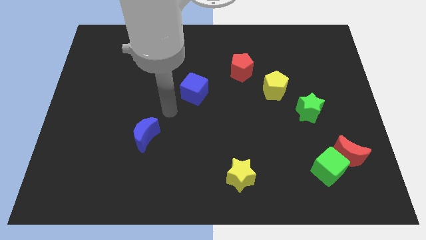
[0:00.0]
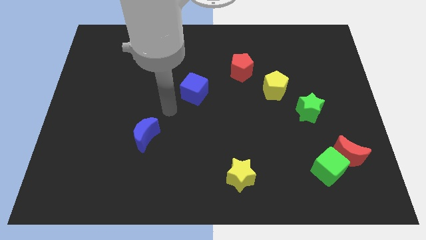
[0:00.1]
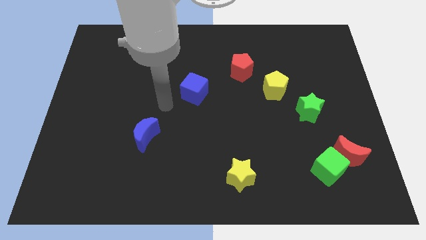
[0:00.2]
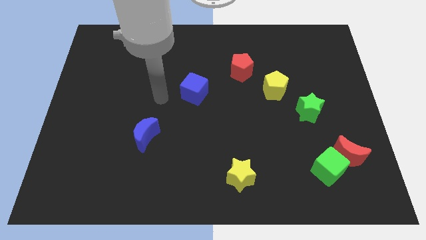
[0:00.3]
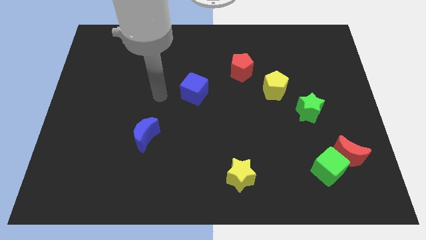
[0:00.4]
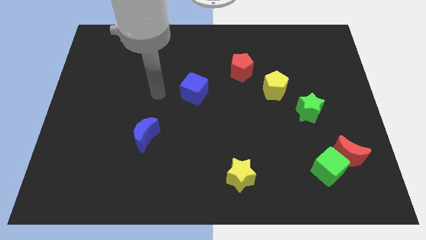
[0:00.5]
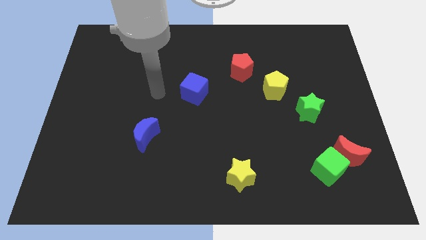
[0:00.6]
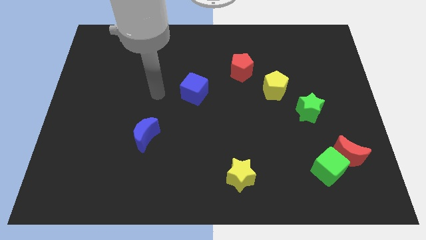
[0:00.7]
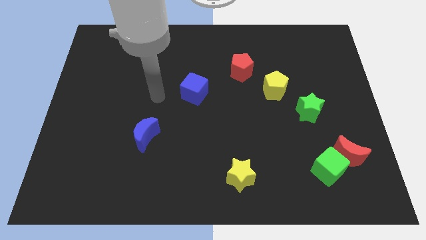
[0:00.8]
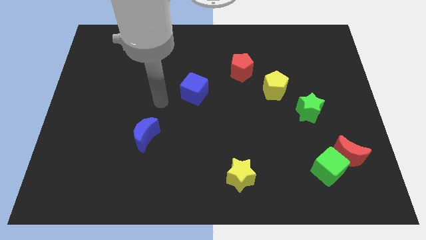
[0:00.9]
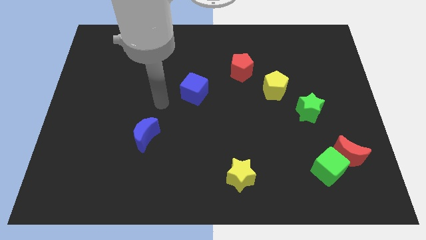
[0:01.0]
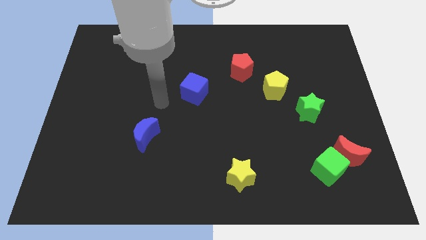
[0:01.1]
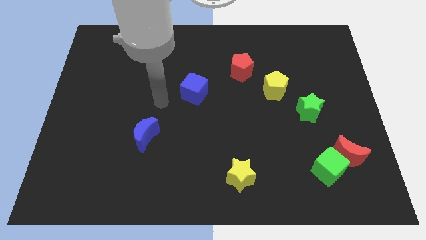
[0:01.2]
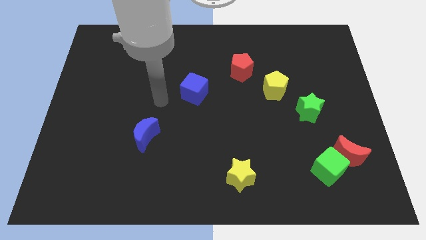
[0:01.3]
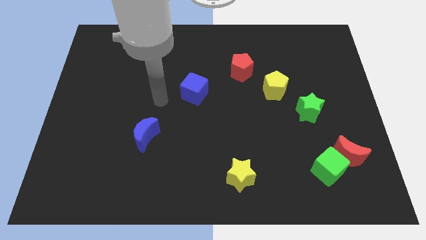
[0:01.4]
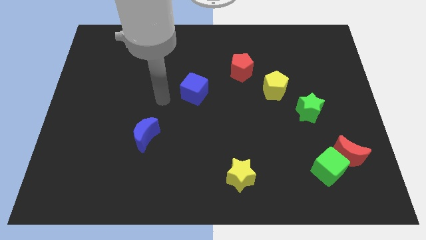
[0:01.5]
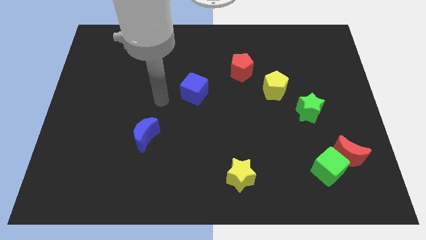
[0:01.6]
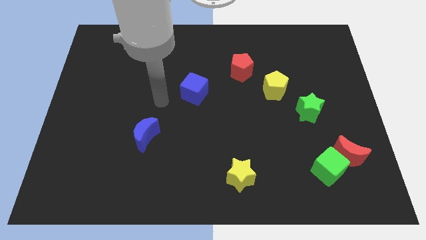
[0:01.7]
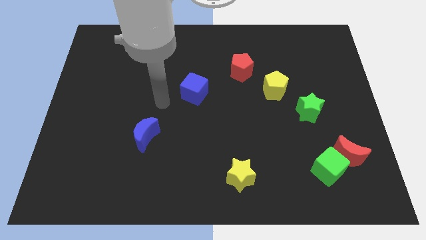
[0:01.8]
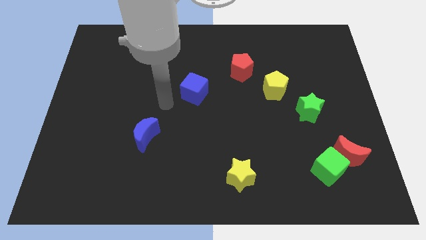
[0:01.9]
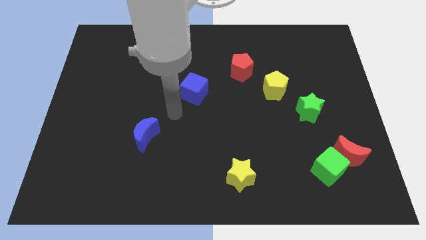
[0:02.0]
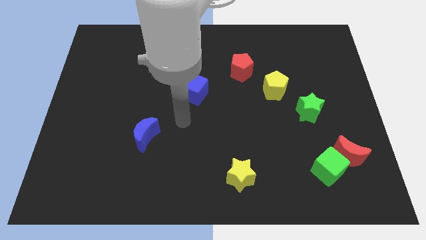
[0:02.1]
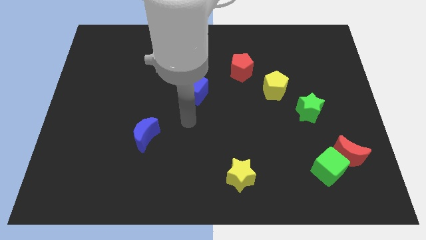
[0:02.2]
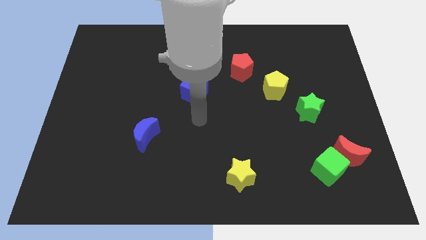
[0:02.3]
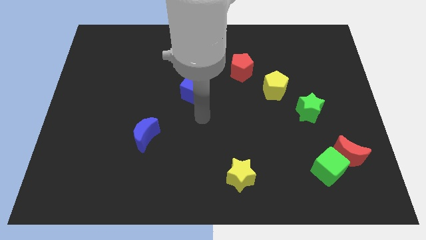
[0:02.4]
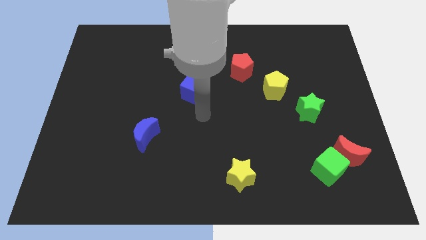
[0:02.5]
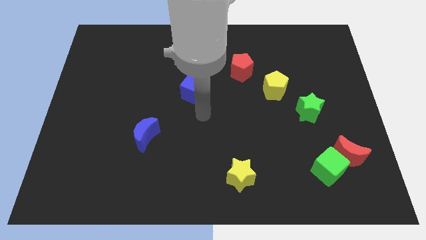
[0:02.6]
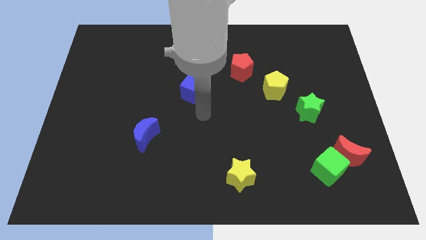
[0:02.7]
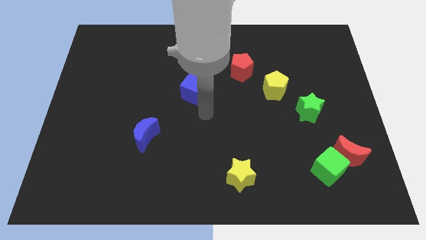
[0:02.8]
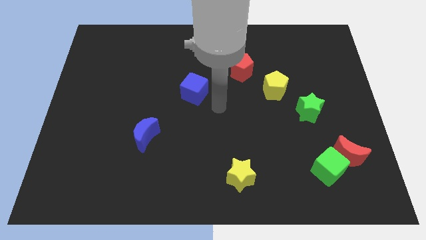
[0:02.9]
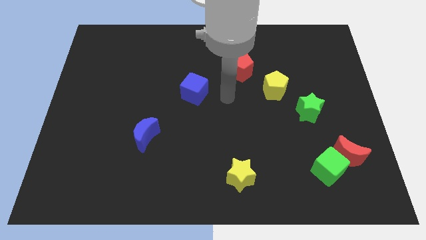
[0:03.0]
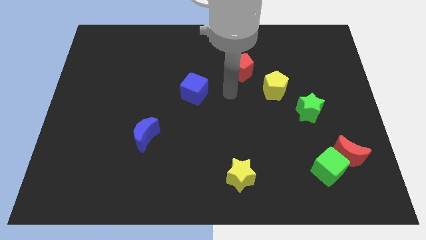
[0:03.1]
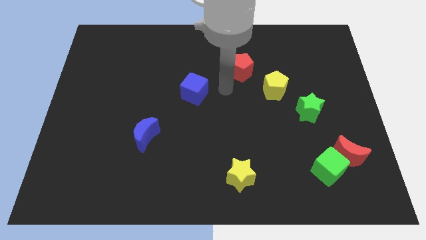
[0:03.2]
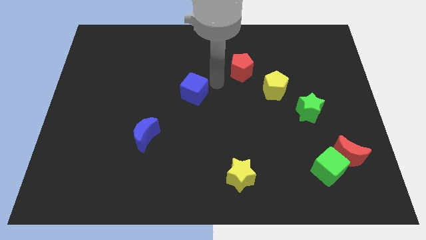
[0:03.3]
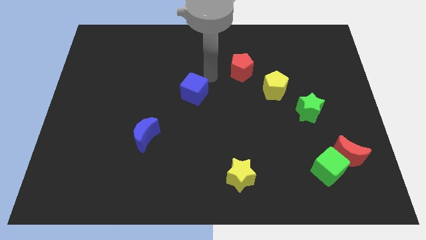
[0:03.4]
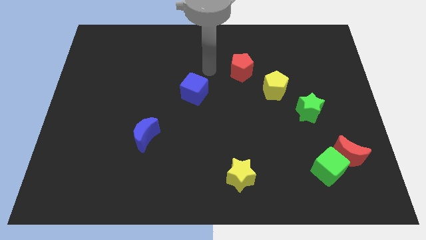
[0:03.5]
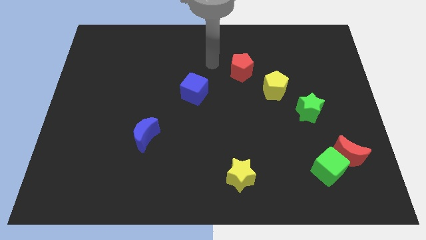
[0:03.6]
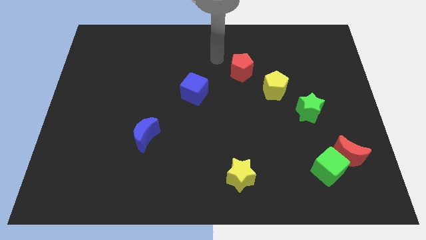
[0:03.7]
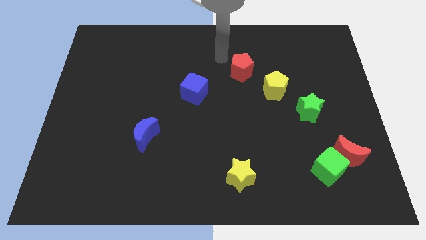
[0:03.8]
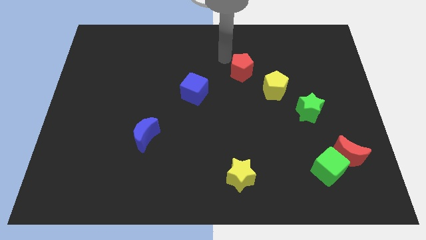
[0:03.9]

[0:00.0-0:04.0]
move your arm to the top left of the red pentagon

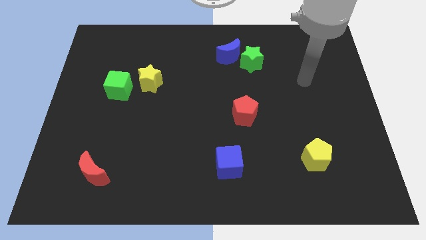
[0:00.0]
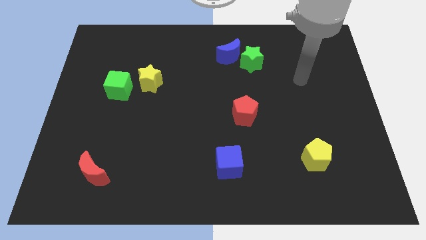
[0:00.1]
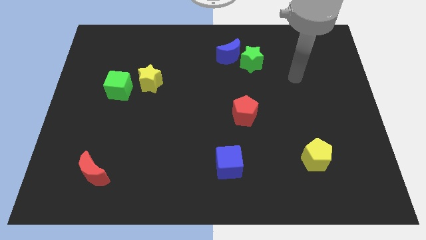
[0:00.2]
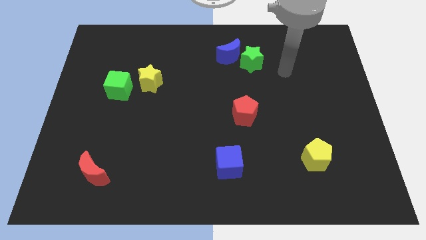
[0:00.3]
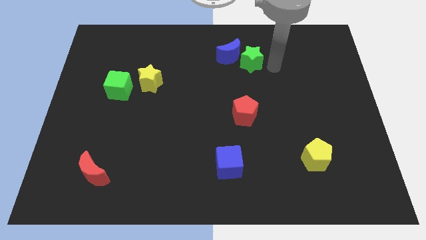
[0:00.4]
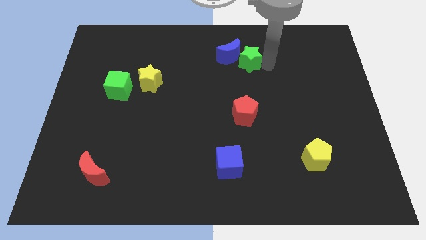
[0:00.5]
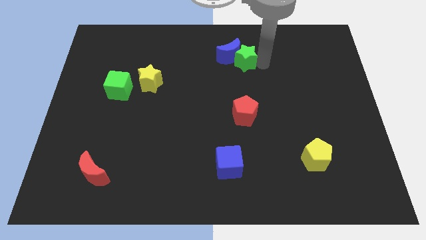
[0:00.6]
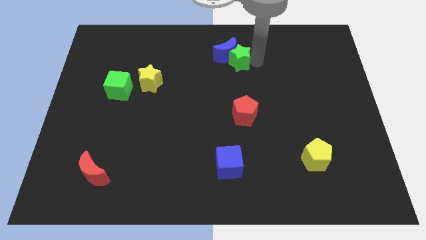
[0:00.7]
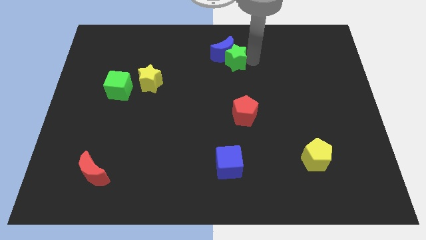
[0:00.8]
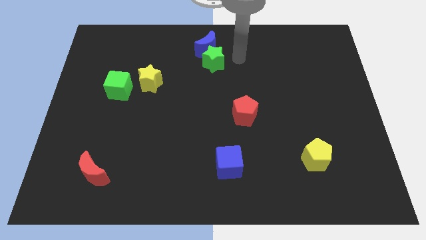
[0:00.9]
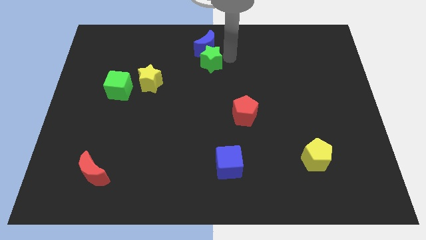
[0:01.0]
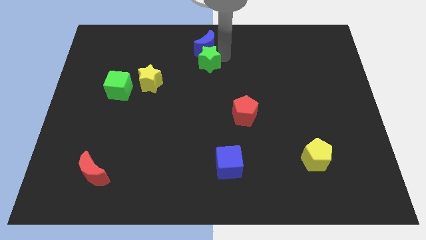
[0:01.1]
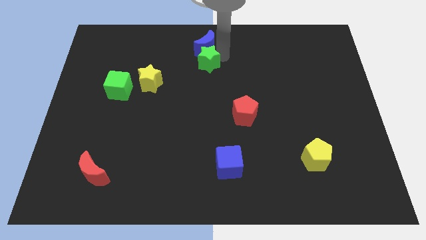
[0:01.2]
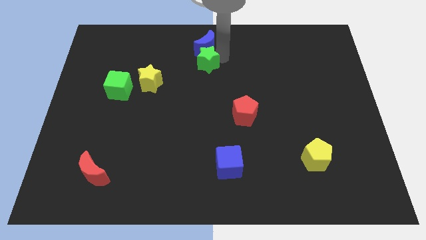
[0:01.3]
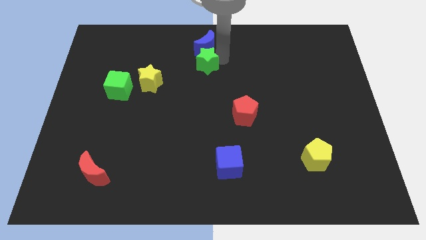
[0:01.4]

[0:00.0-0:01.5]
place the green star below the blue crescent

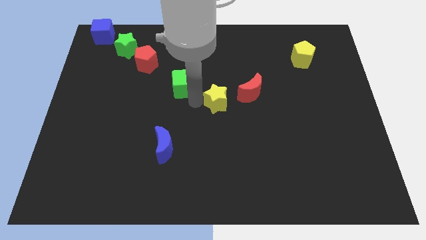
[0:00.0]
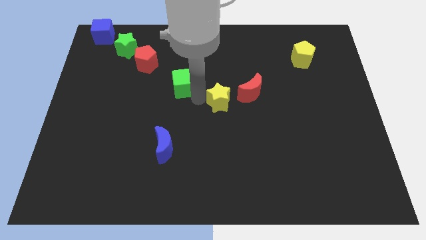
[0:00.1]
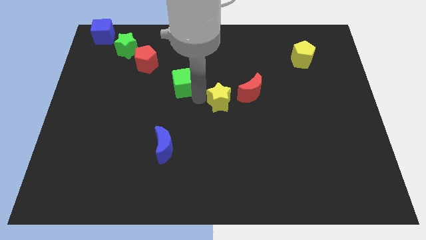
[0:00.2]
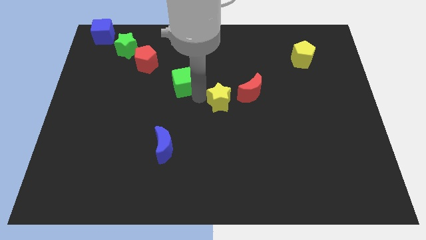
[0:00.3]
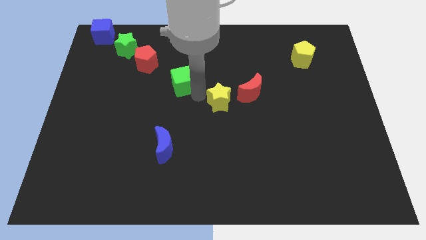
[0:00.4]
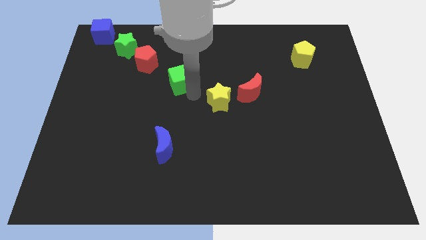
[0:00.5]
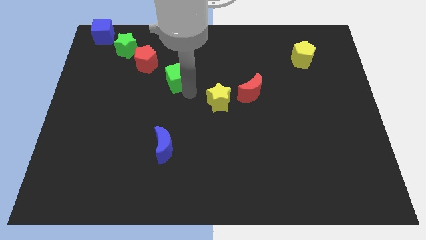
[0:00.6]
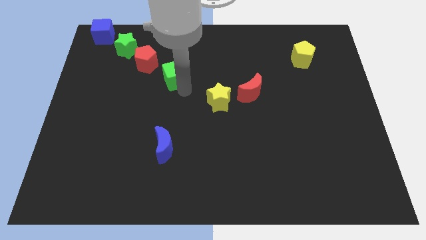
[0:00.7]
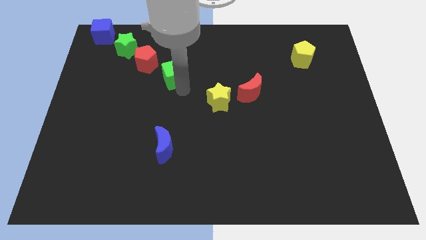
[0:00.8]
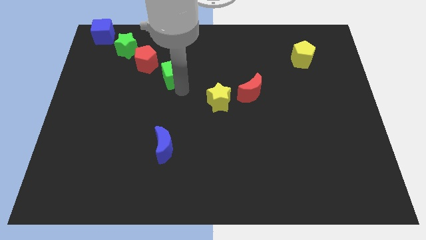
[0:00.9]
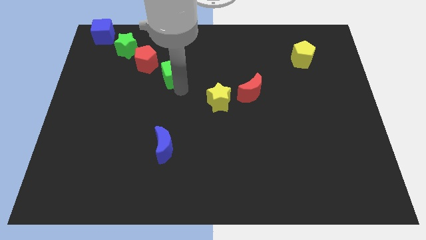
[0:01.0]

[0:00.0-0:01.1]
push green cube towards red pentagon

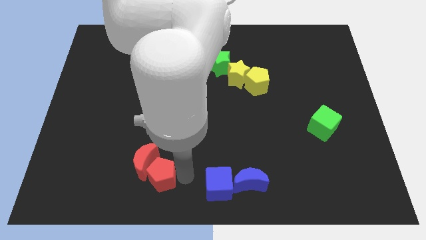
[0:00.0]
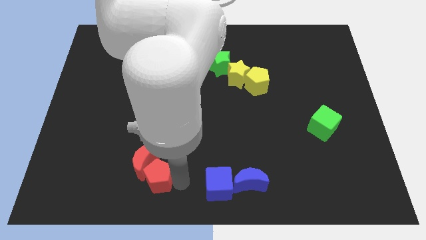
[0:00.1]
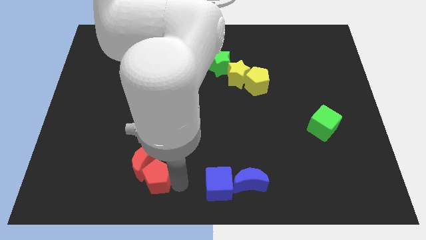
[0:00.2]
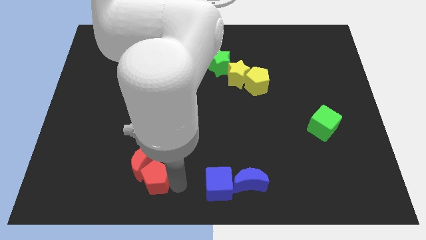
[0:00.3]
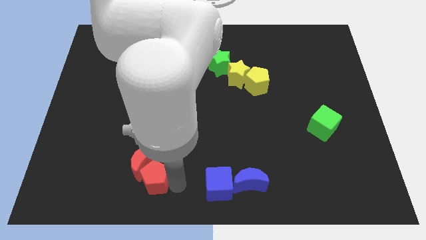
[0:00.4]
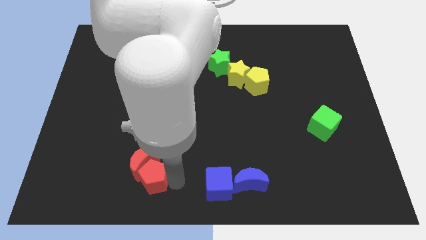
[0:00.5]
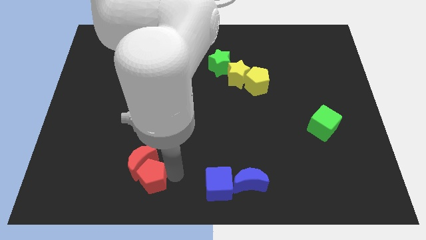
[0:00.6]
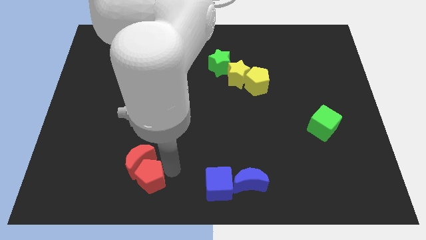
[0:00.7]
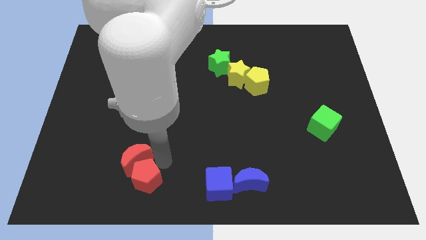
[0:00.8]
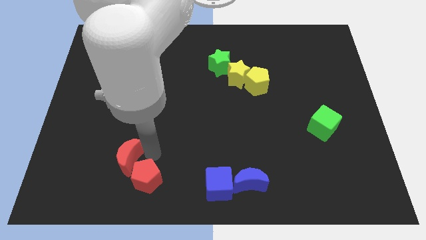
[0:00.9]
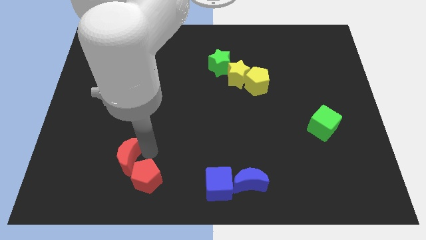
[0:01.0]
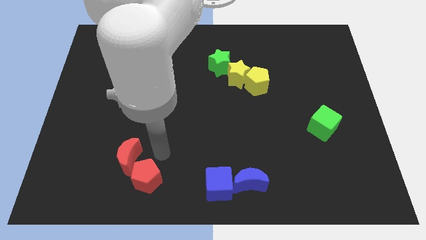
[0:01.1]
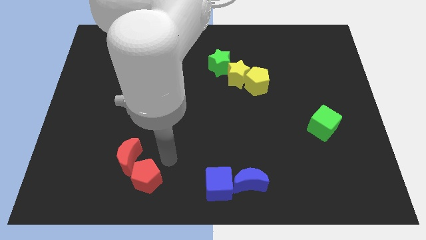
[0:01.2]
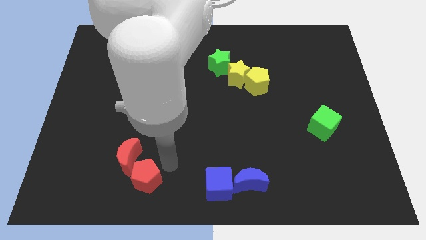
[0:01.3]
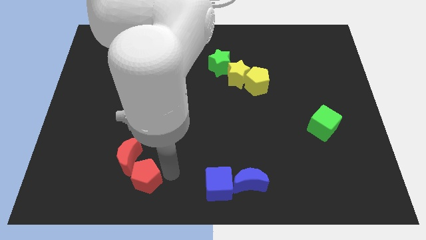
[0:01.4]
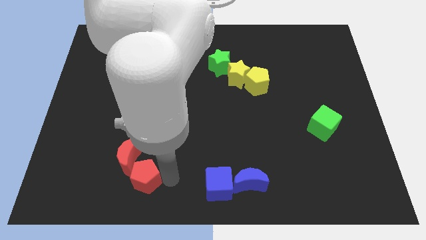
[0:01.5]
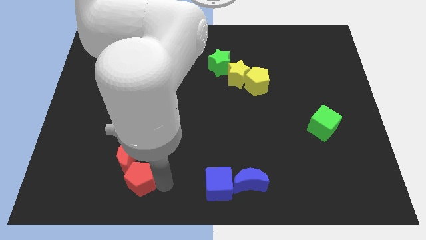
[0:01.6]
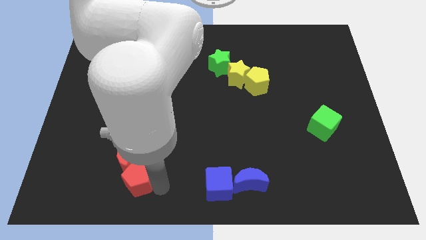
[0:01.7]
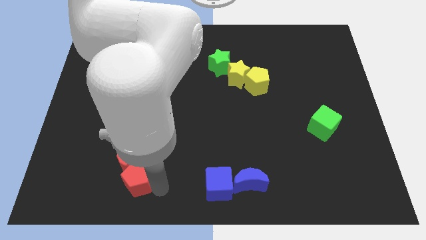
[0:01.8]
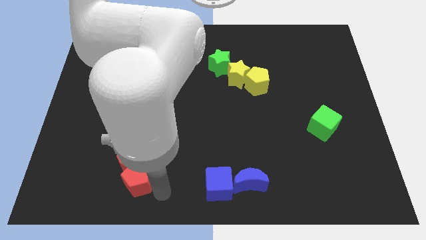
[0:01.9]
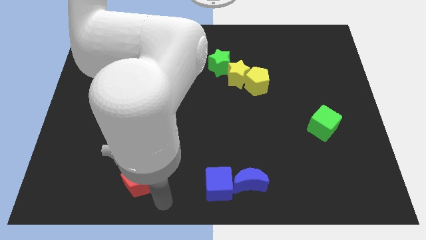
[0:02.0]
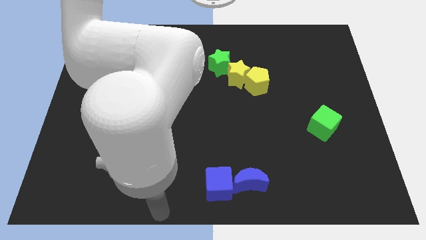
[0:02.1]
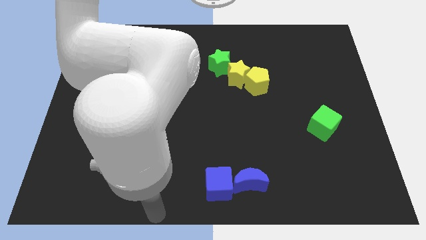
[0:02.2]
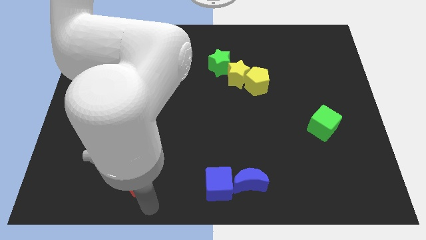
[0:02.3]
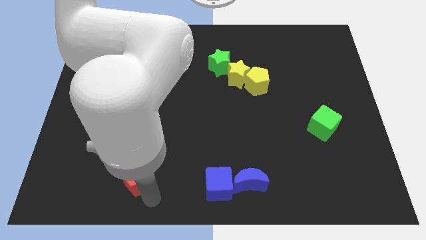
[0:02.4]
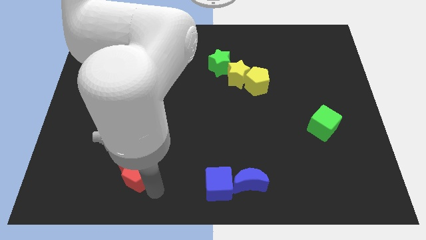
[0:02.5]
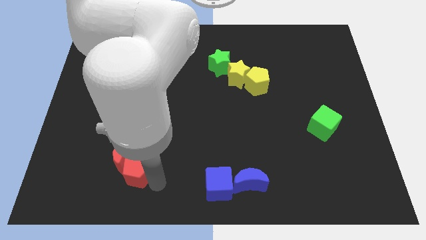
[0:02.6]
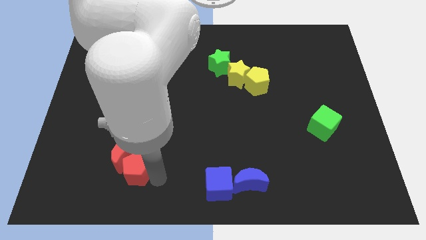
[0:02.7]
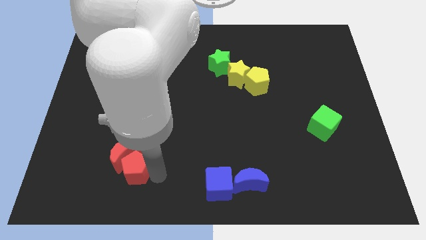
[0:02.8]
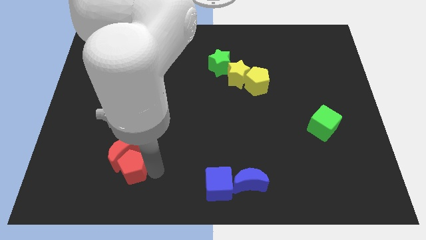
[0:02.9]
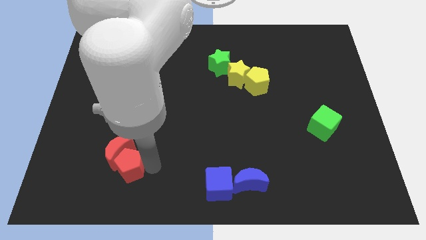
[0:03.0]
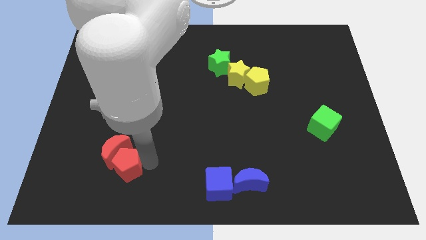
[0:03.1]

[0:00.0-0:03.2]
push the red pentagon slightly to the left
